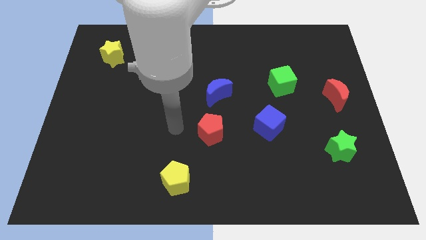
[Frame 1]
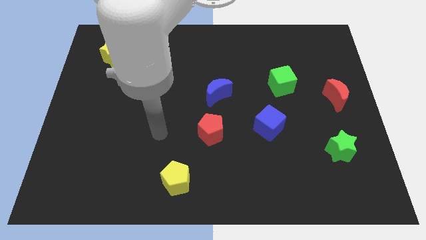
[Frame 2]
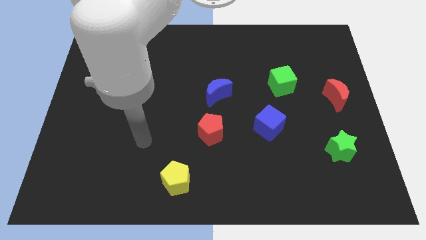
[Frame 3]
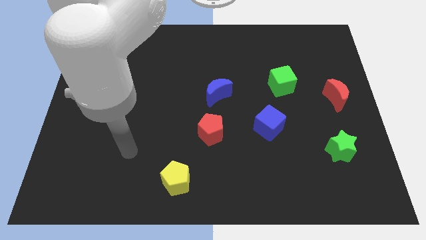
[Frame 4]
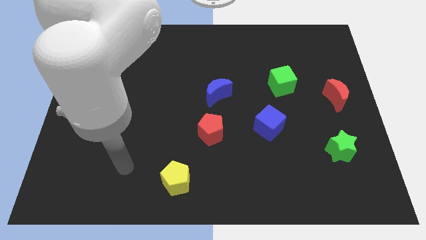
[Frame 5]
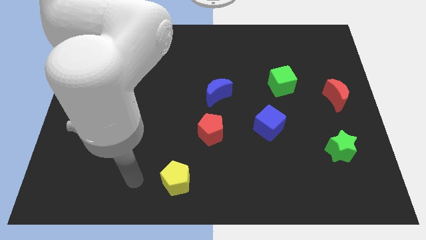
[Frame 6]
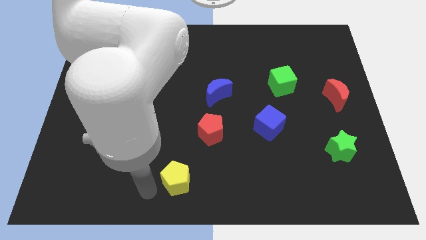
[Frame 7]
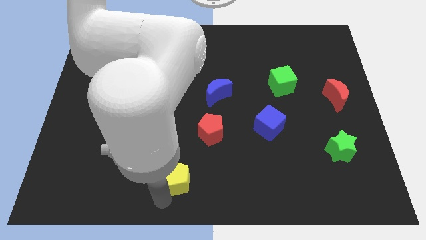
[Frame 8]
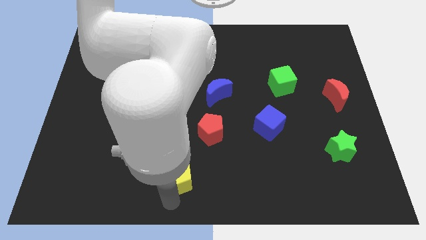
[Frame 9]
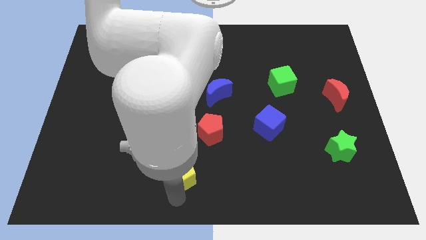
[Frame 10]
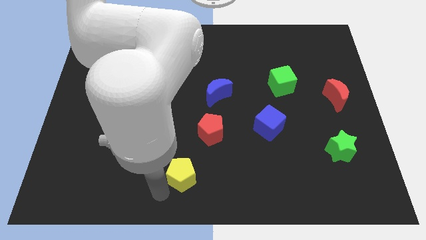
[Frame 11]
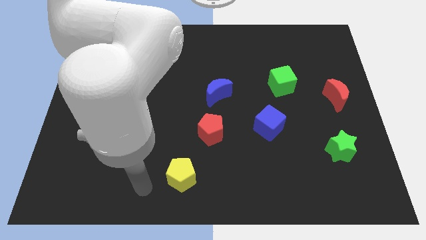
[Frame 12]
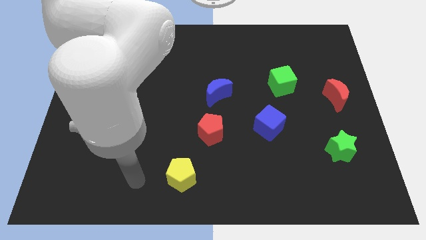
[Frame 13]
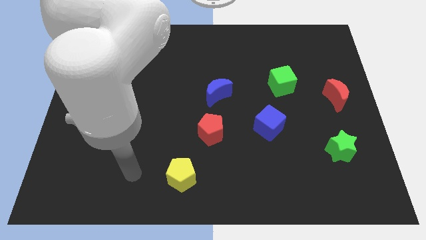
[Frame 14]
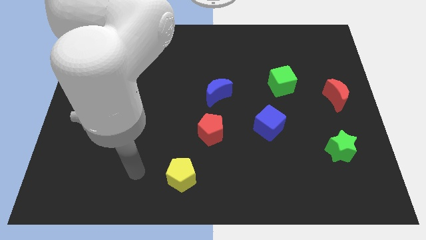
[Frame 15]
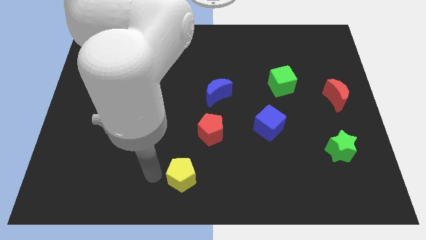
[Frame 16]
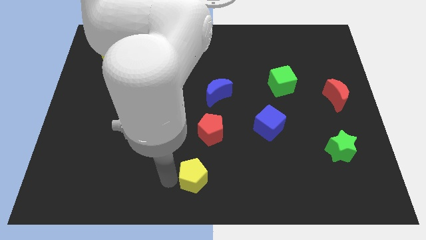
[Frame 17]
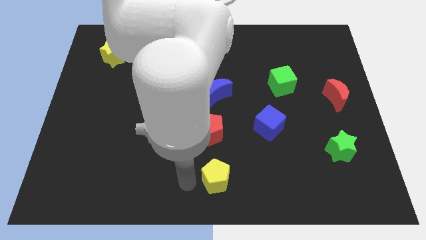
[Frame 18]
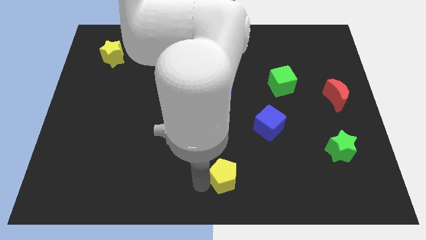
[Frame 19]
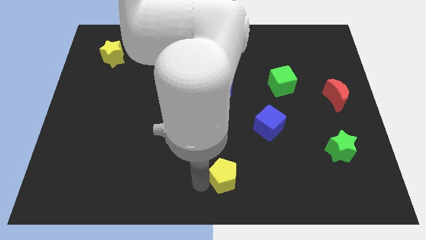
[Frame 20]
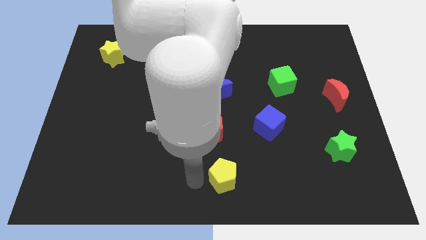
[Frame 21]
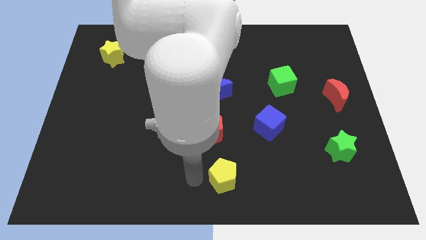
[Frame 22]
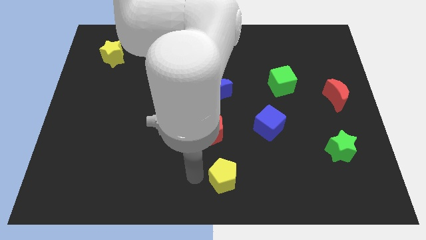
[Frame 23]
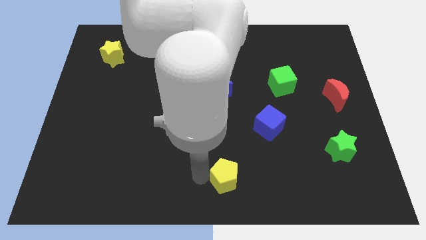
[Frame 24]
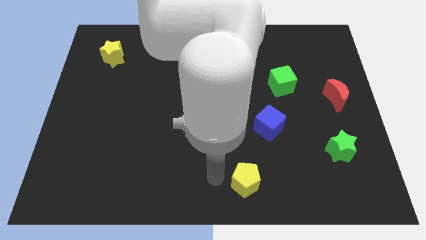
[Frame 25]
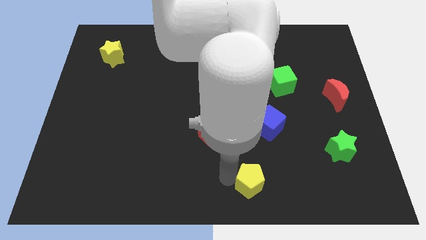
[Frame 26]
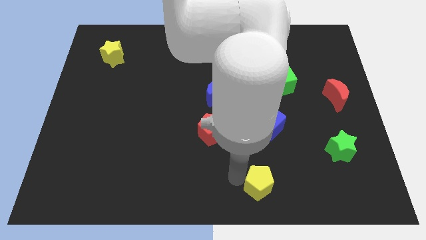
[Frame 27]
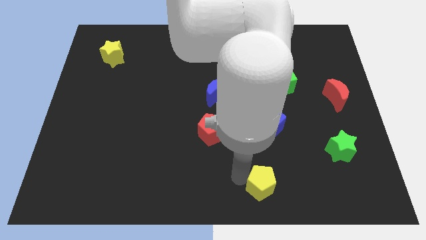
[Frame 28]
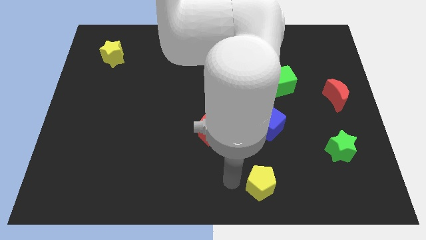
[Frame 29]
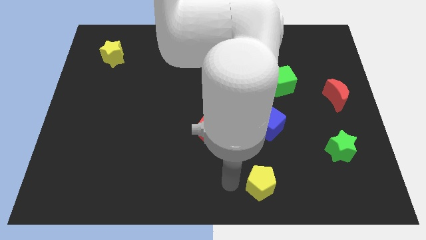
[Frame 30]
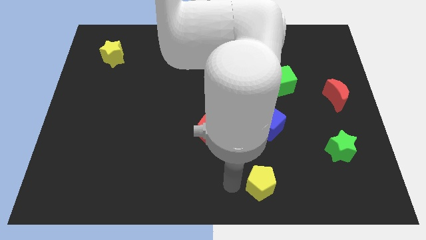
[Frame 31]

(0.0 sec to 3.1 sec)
push yellow pentagon vertically below blue cube

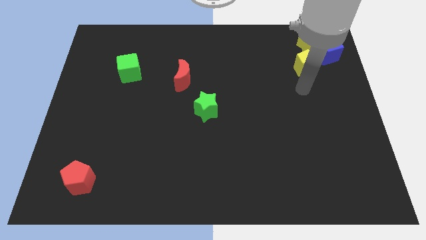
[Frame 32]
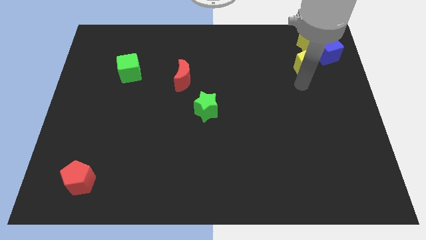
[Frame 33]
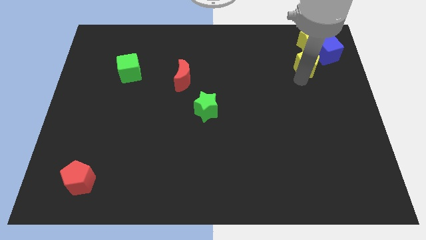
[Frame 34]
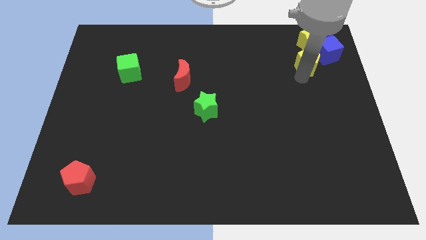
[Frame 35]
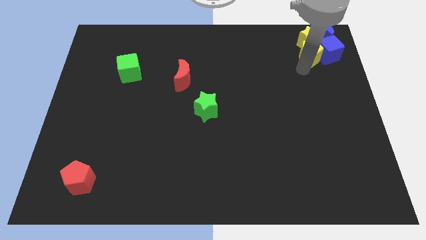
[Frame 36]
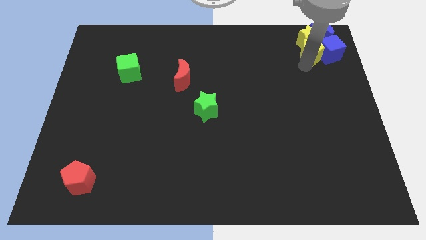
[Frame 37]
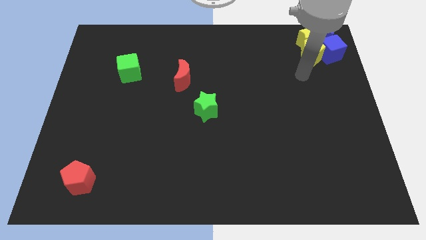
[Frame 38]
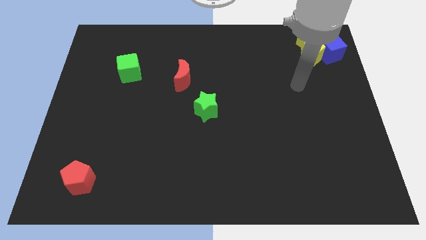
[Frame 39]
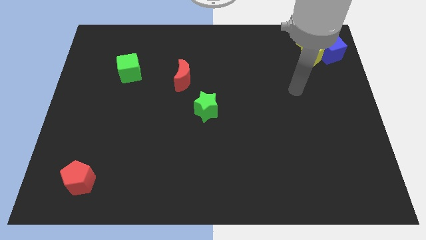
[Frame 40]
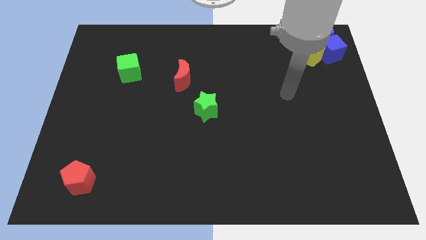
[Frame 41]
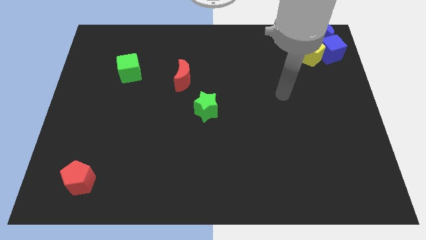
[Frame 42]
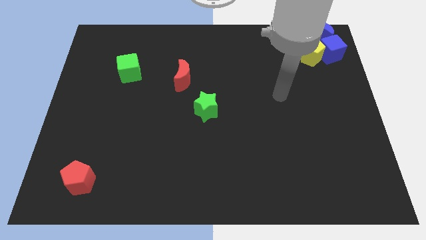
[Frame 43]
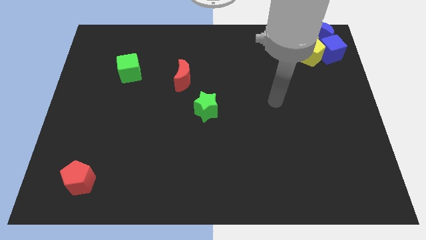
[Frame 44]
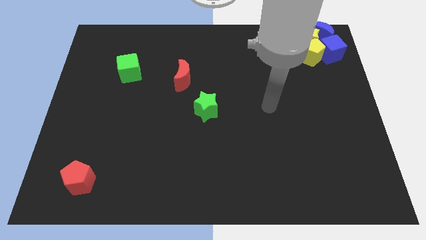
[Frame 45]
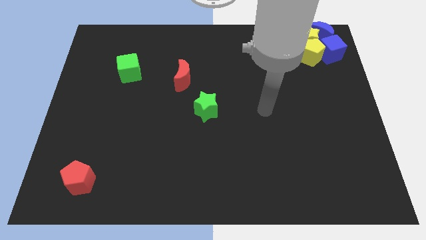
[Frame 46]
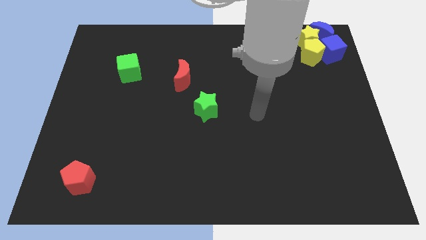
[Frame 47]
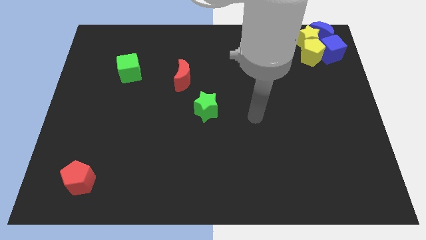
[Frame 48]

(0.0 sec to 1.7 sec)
push the yellow pentagon into group of blue and yellow blocks

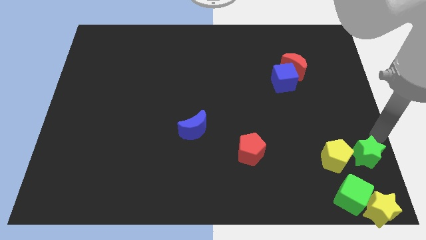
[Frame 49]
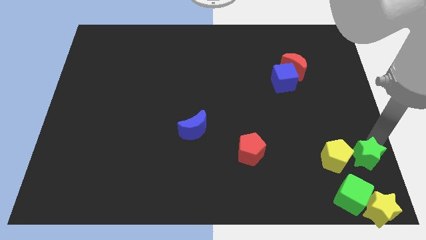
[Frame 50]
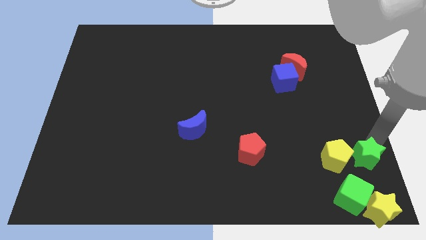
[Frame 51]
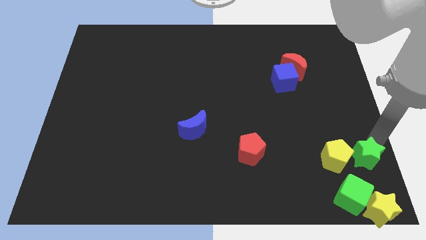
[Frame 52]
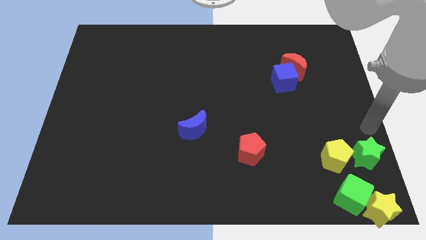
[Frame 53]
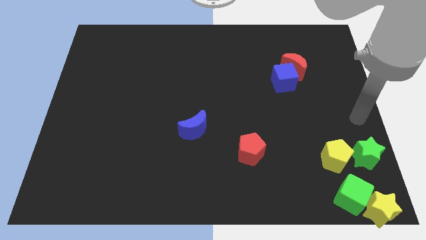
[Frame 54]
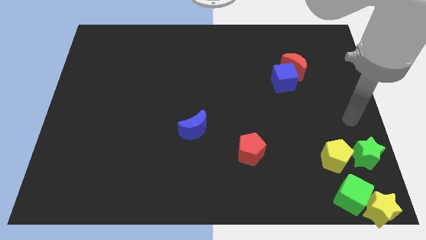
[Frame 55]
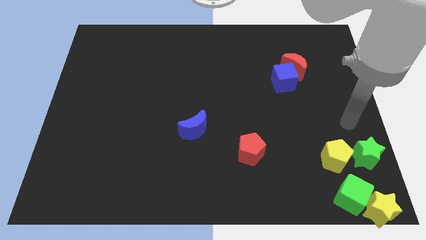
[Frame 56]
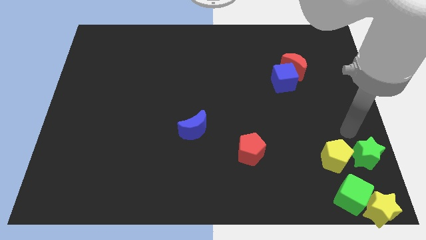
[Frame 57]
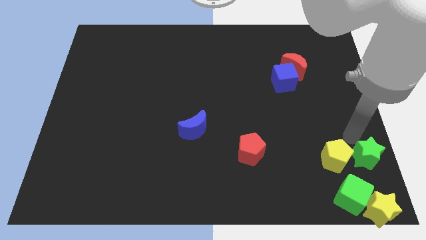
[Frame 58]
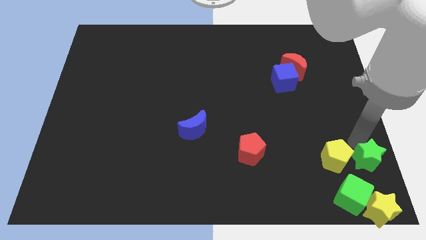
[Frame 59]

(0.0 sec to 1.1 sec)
move your arm top left to the green star

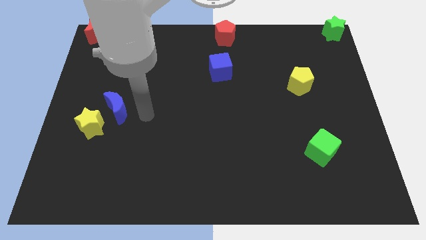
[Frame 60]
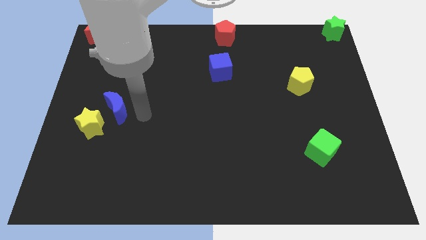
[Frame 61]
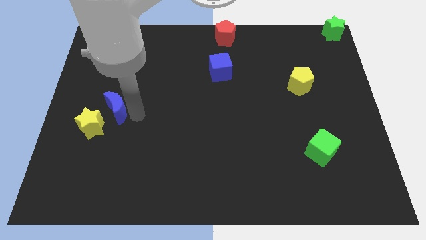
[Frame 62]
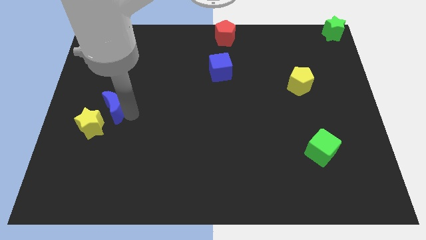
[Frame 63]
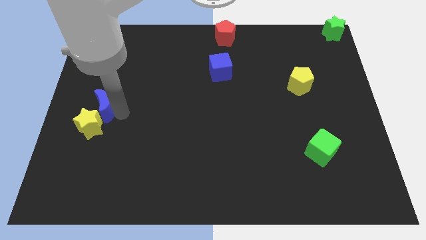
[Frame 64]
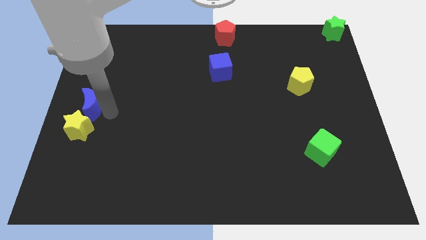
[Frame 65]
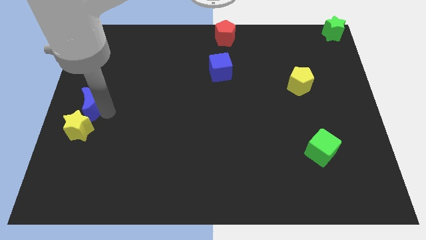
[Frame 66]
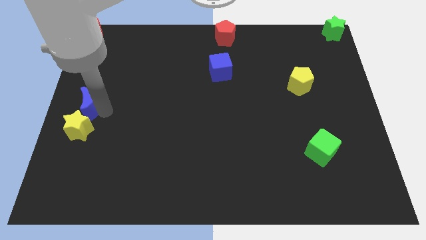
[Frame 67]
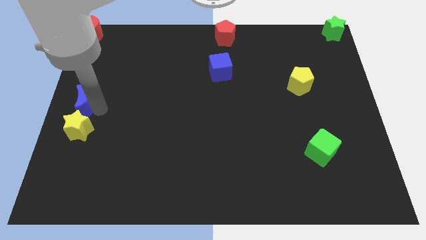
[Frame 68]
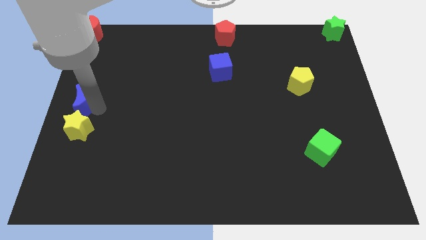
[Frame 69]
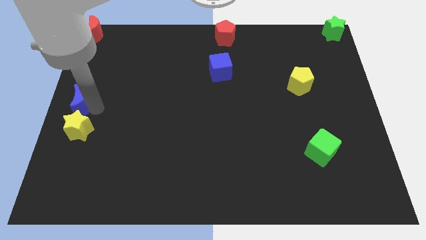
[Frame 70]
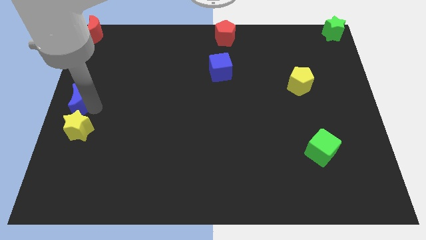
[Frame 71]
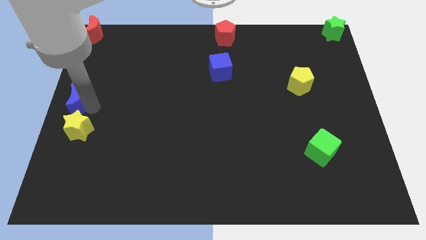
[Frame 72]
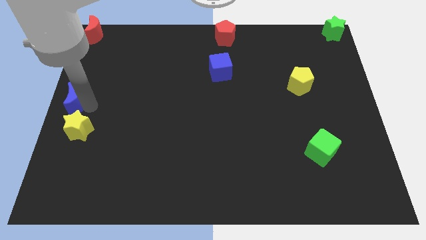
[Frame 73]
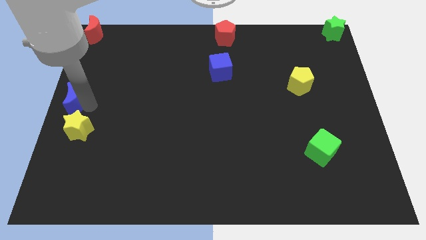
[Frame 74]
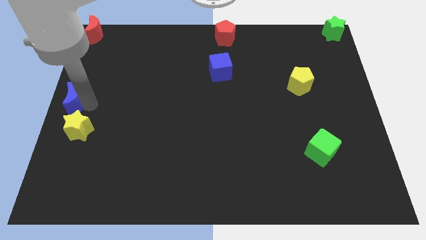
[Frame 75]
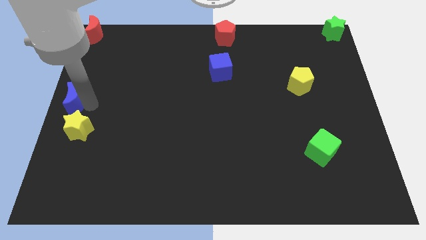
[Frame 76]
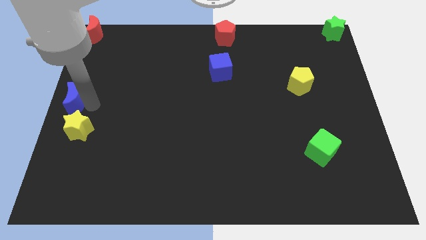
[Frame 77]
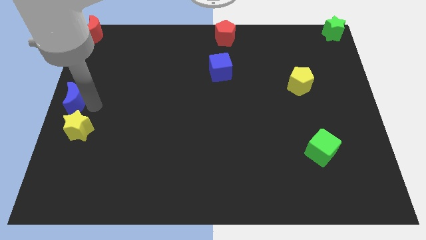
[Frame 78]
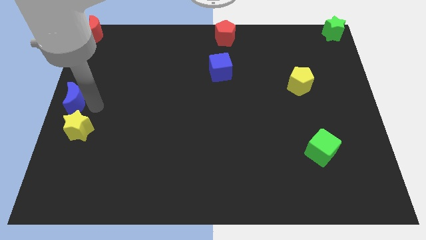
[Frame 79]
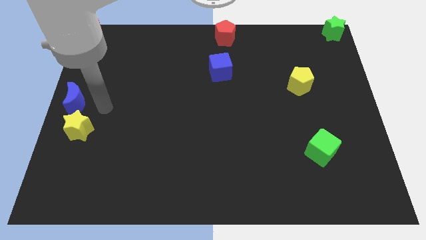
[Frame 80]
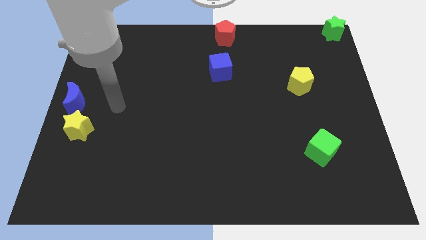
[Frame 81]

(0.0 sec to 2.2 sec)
move blue moon towards center left

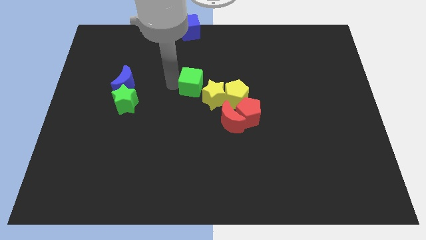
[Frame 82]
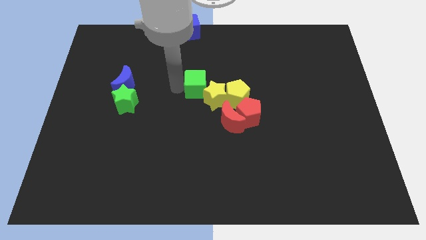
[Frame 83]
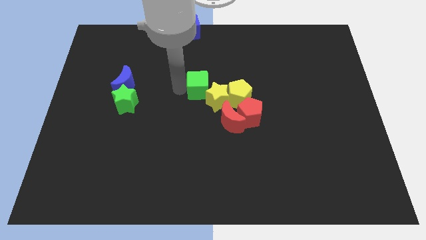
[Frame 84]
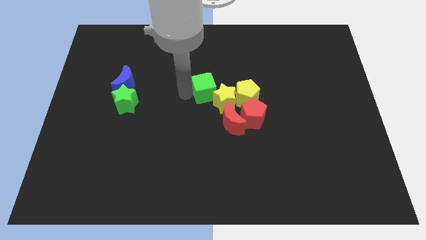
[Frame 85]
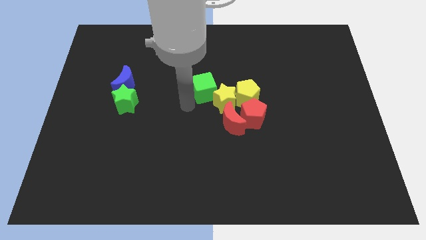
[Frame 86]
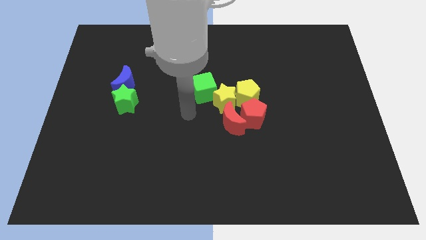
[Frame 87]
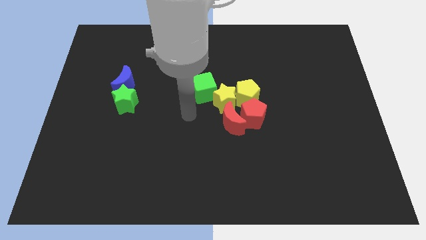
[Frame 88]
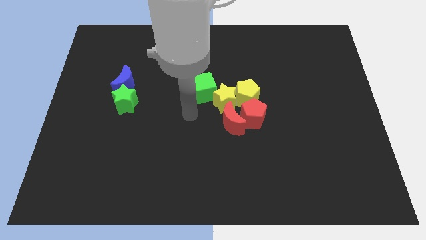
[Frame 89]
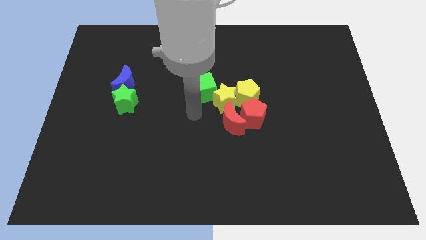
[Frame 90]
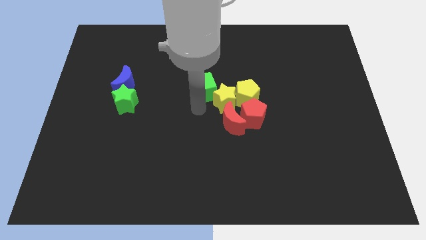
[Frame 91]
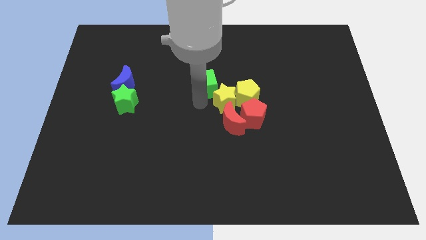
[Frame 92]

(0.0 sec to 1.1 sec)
push the green cube towards the top left of the yellow star
